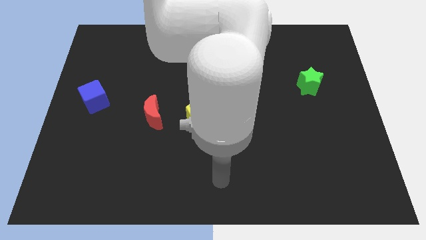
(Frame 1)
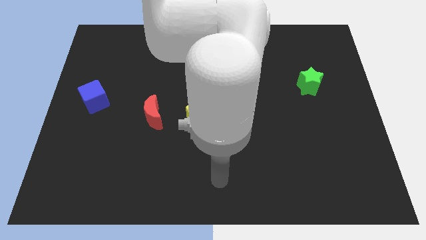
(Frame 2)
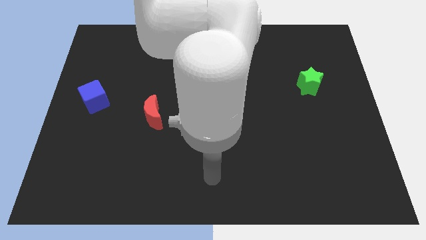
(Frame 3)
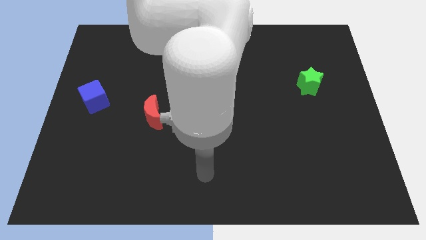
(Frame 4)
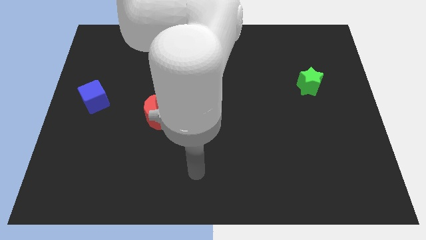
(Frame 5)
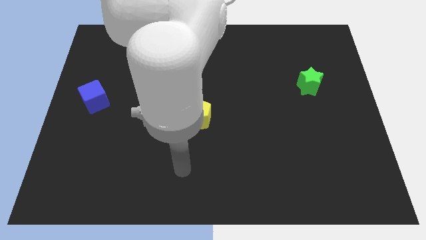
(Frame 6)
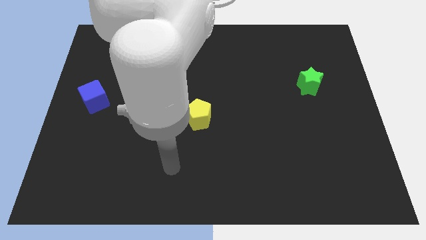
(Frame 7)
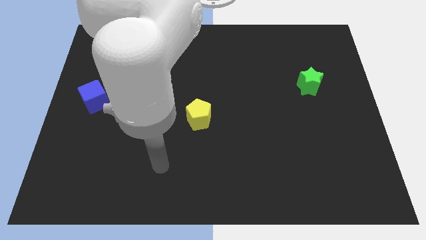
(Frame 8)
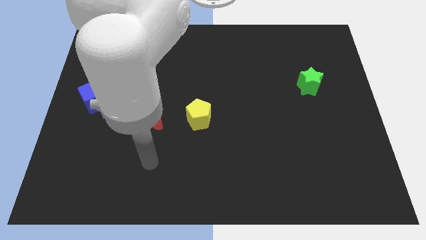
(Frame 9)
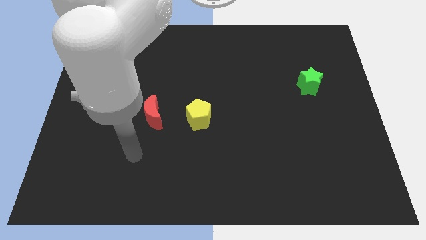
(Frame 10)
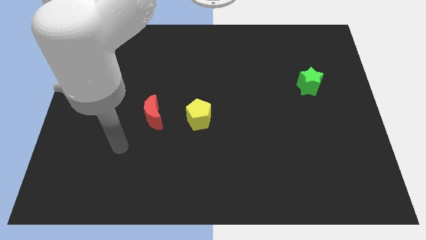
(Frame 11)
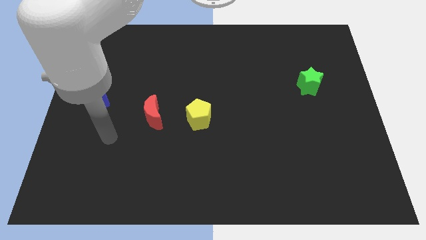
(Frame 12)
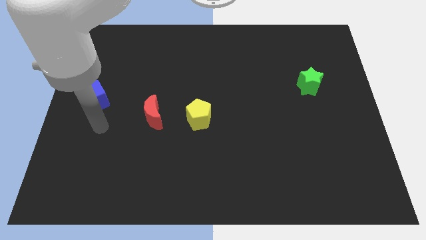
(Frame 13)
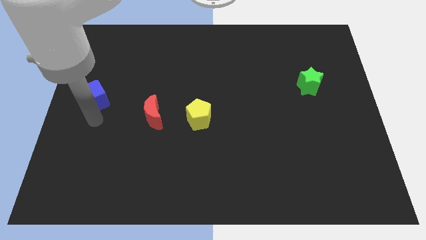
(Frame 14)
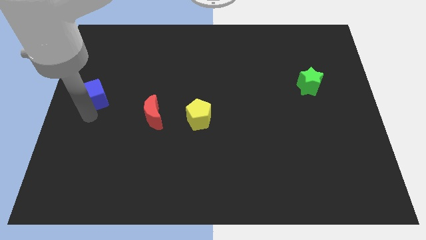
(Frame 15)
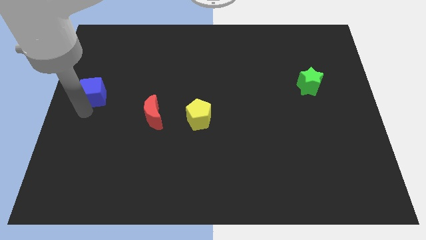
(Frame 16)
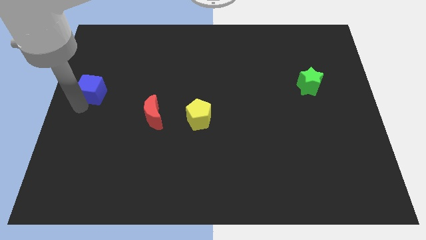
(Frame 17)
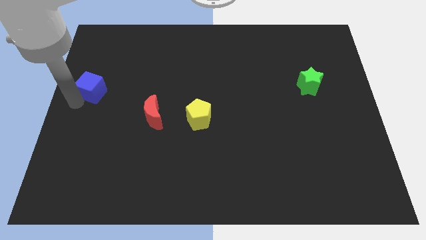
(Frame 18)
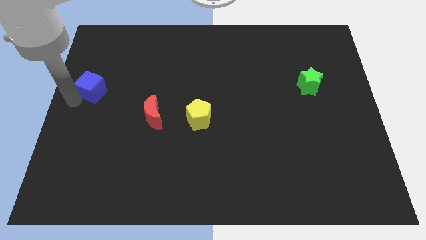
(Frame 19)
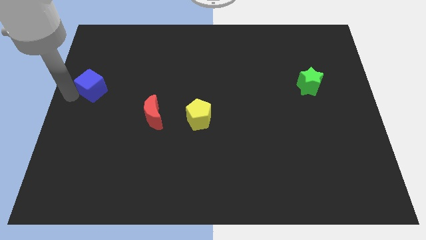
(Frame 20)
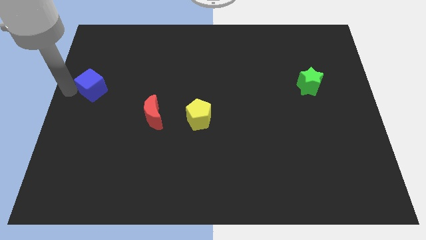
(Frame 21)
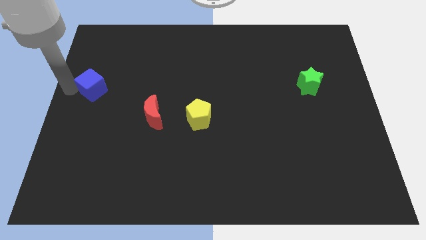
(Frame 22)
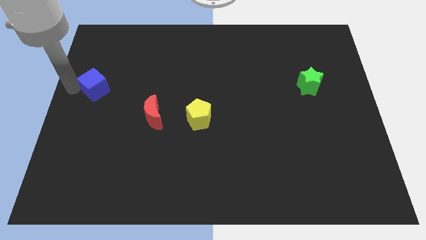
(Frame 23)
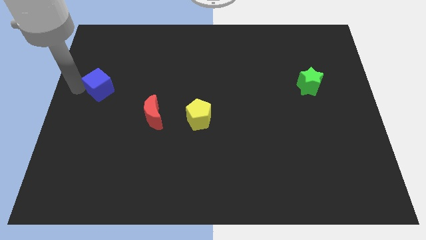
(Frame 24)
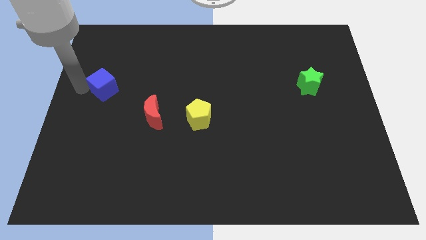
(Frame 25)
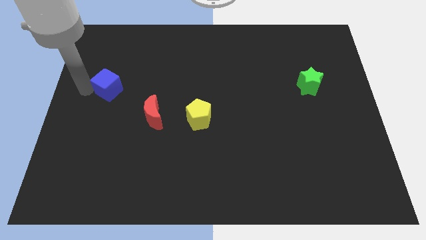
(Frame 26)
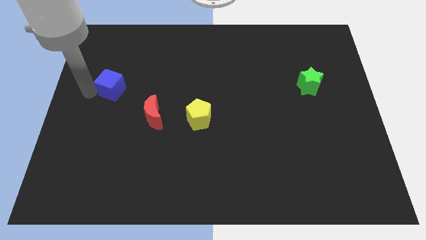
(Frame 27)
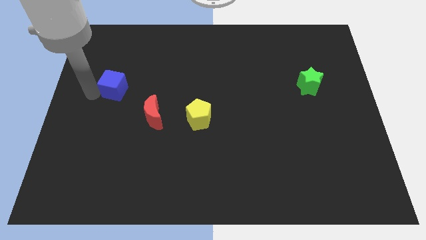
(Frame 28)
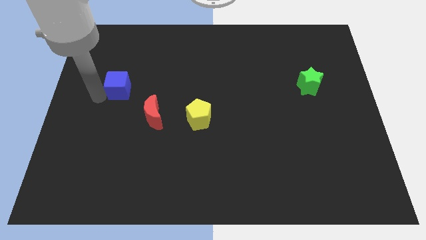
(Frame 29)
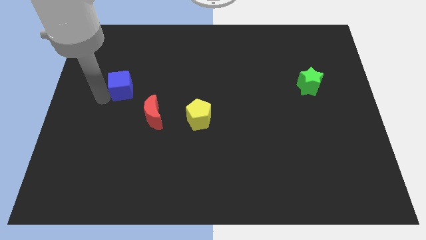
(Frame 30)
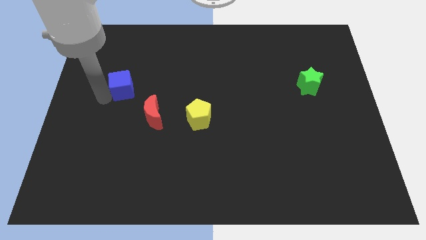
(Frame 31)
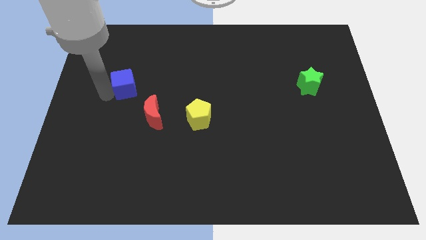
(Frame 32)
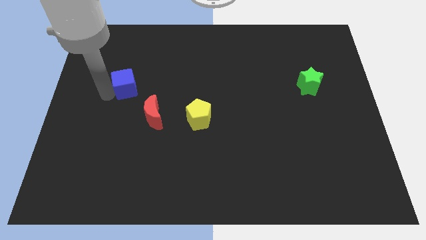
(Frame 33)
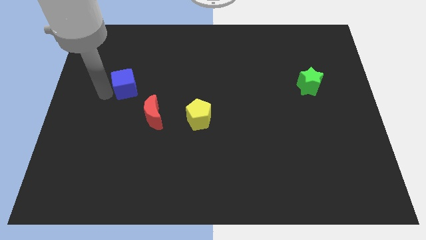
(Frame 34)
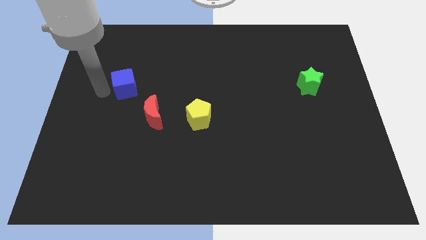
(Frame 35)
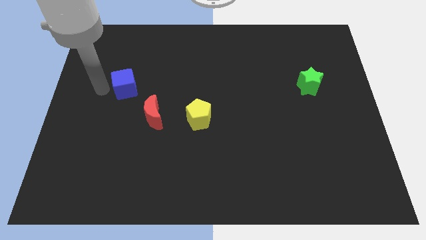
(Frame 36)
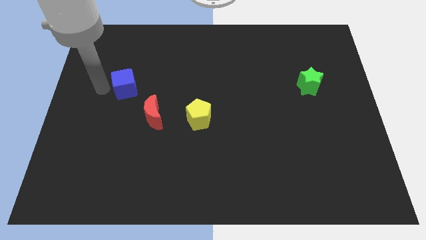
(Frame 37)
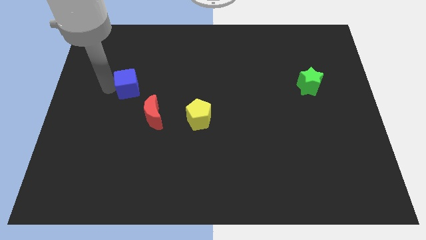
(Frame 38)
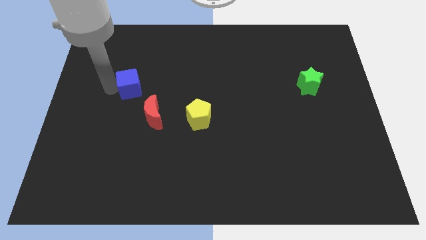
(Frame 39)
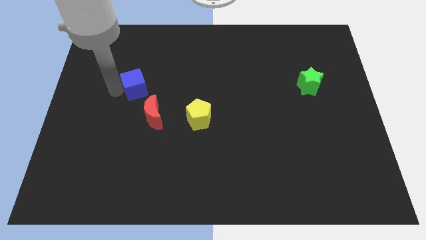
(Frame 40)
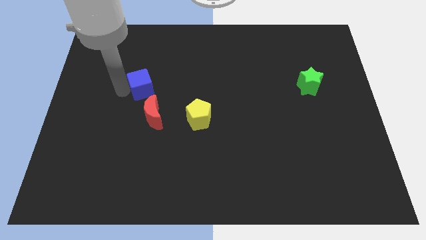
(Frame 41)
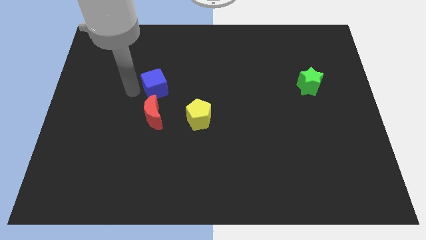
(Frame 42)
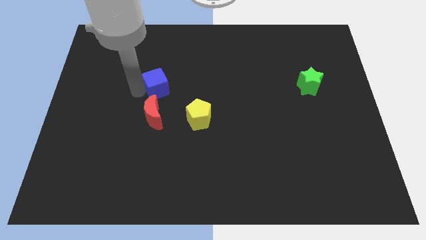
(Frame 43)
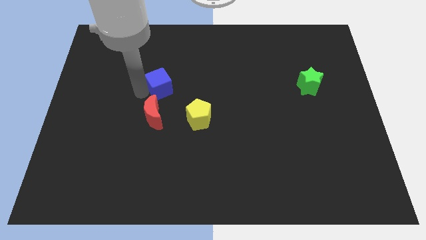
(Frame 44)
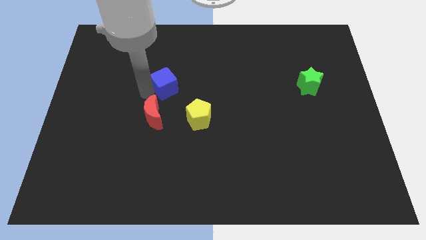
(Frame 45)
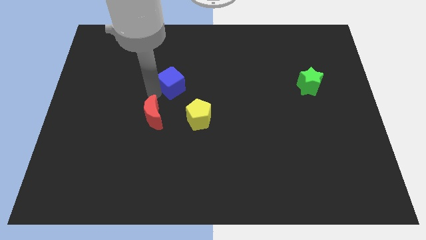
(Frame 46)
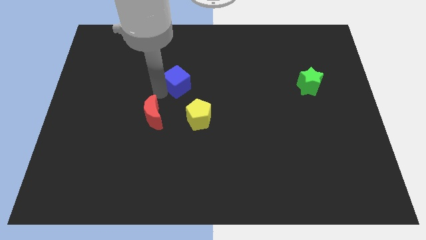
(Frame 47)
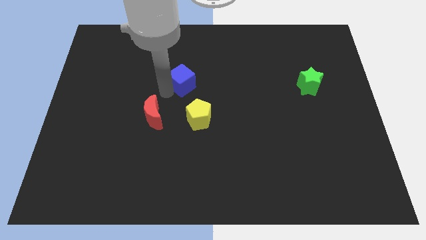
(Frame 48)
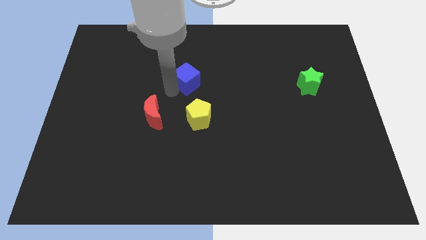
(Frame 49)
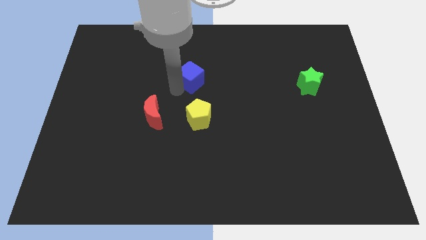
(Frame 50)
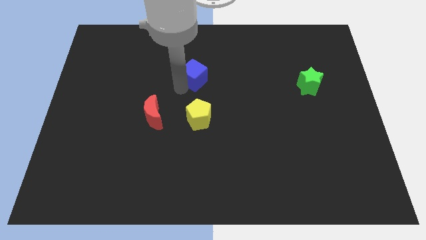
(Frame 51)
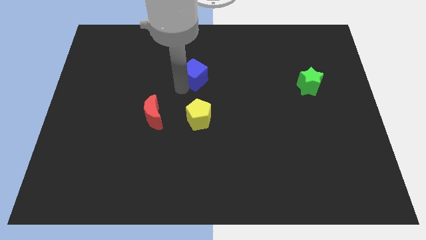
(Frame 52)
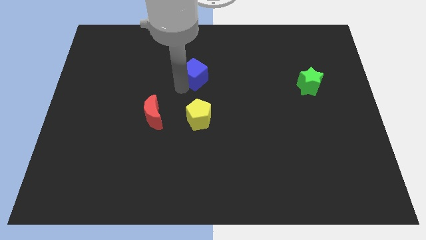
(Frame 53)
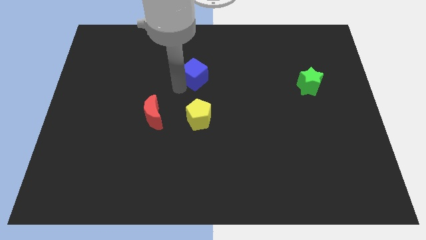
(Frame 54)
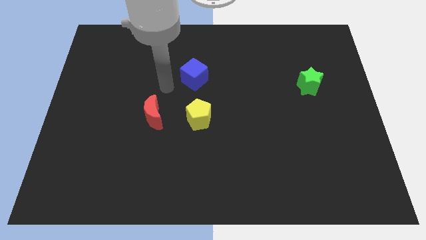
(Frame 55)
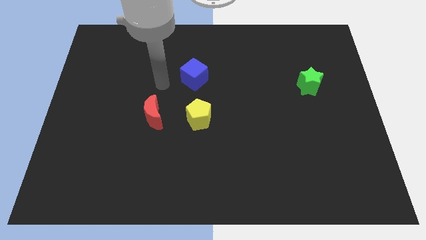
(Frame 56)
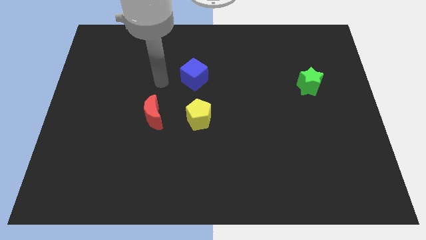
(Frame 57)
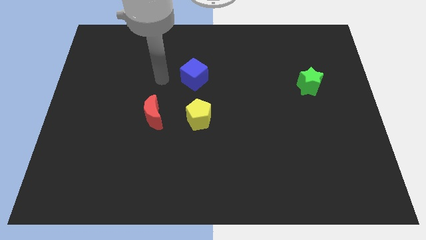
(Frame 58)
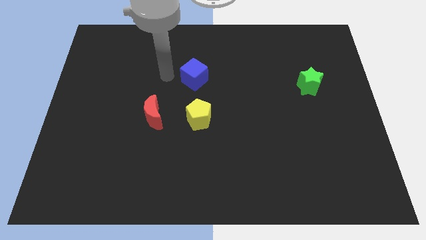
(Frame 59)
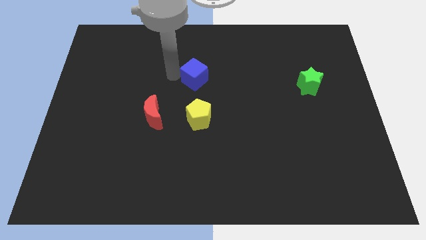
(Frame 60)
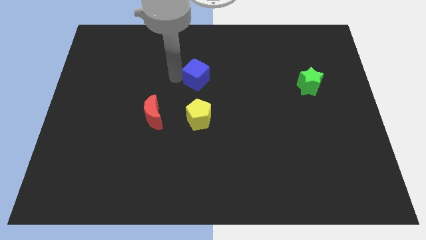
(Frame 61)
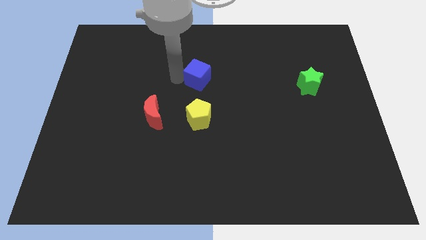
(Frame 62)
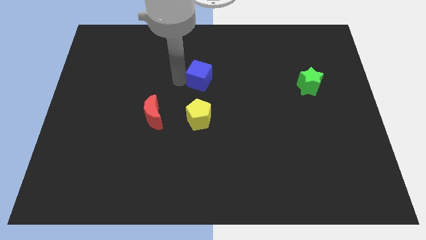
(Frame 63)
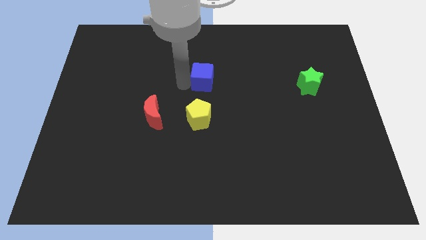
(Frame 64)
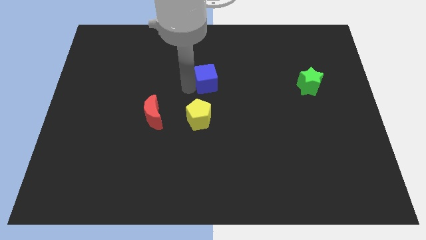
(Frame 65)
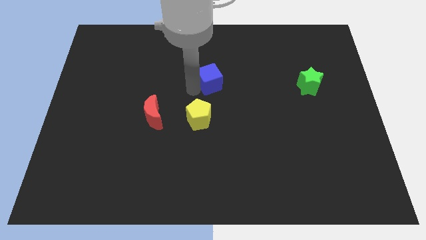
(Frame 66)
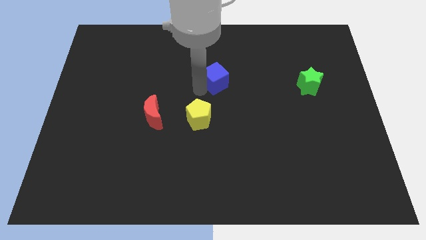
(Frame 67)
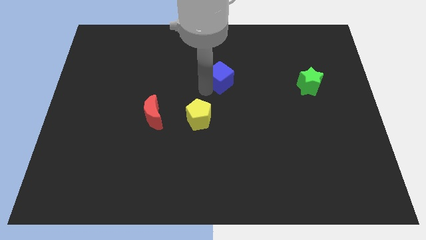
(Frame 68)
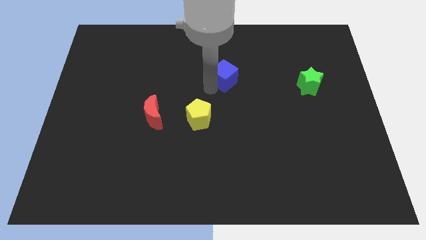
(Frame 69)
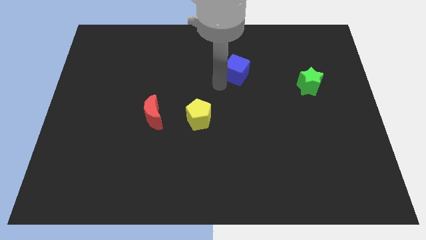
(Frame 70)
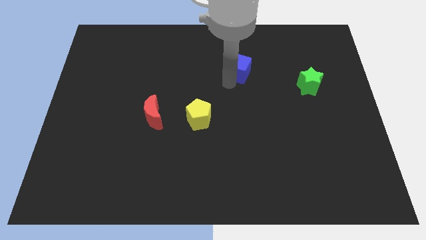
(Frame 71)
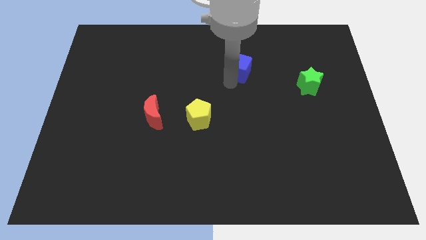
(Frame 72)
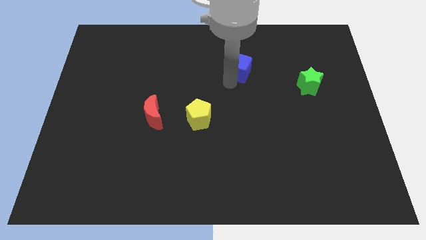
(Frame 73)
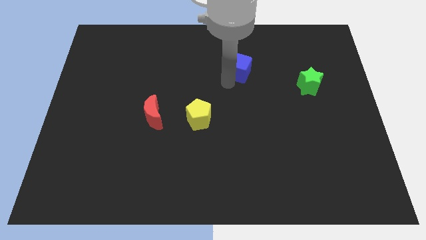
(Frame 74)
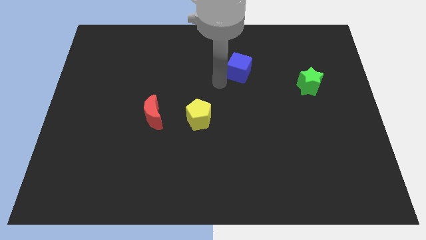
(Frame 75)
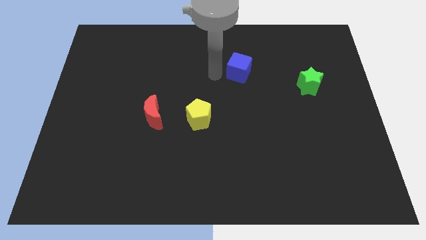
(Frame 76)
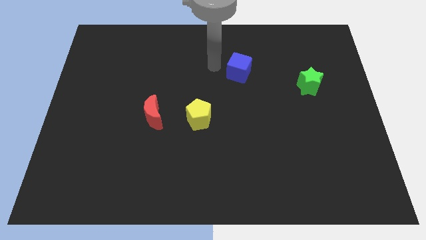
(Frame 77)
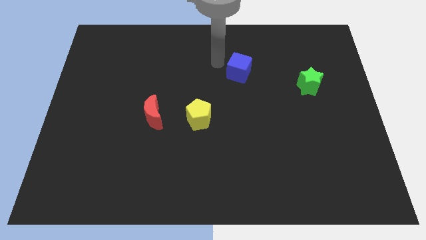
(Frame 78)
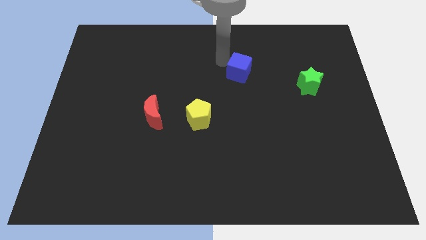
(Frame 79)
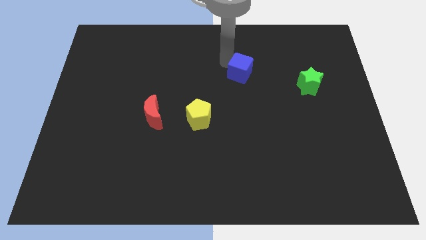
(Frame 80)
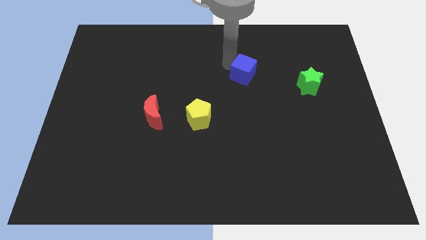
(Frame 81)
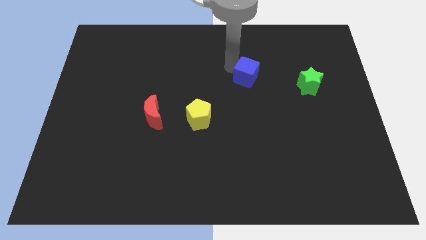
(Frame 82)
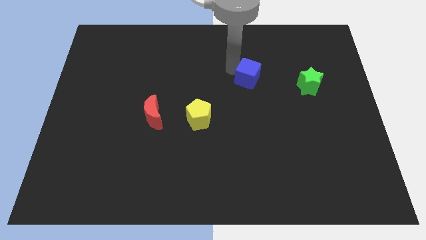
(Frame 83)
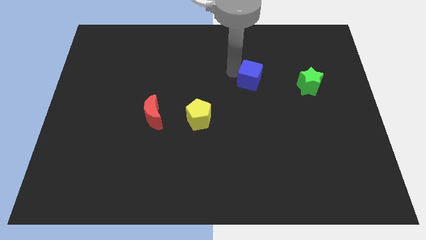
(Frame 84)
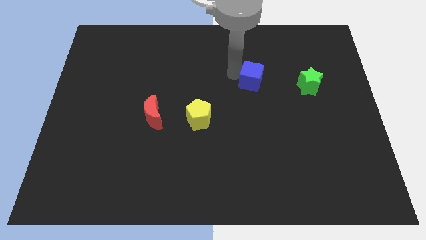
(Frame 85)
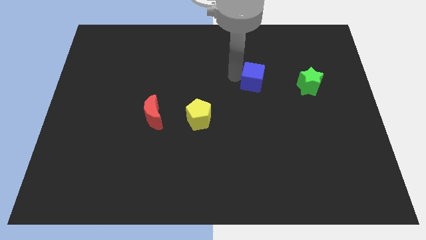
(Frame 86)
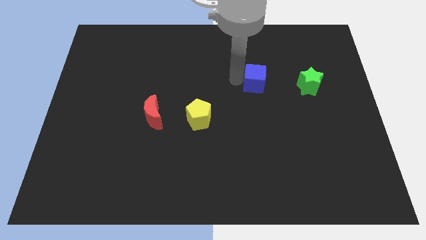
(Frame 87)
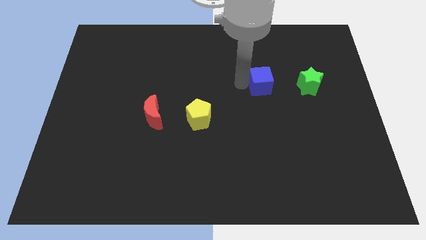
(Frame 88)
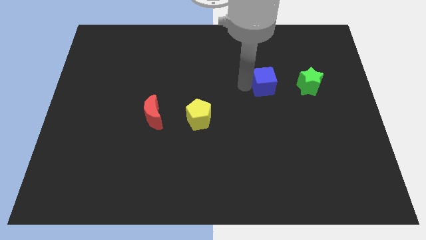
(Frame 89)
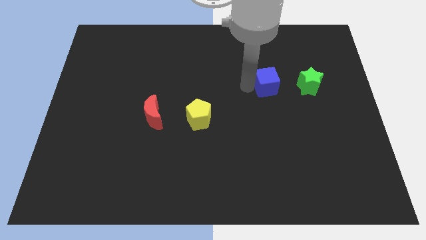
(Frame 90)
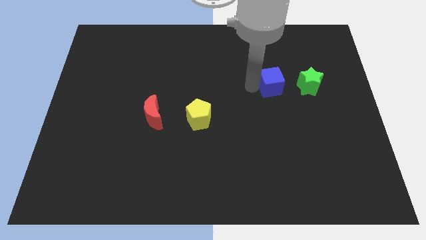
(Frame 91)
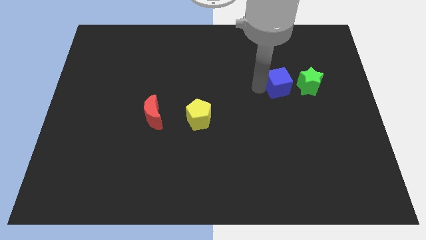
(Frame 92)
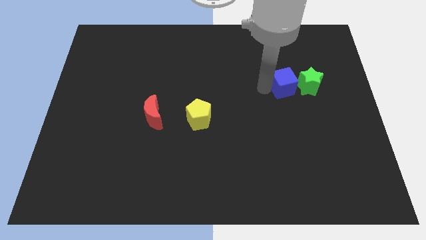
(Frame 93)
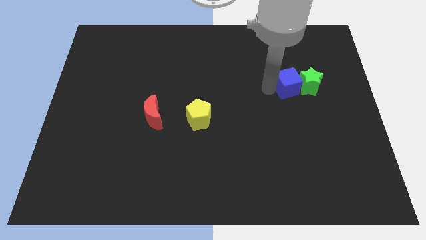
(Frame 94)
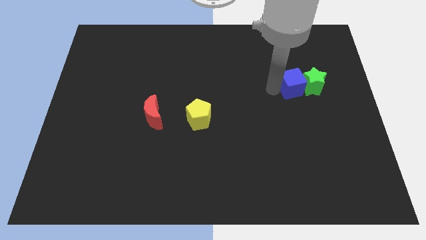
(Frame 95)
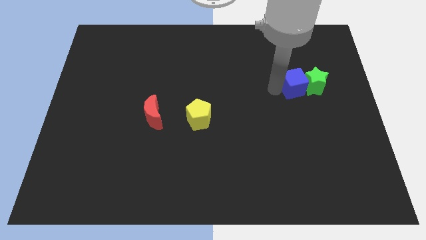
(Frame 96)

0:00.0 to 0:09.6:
slide the blue cube towards the star
